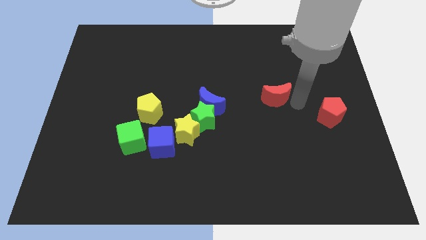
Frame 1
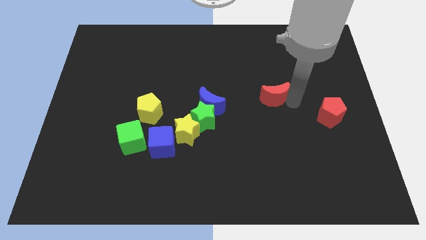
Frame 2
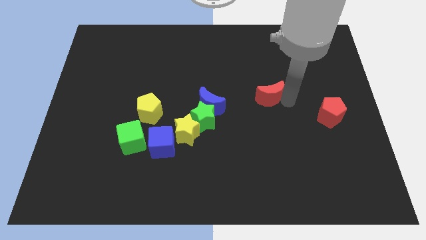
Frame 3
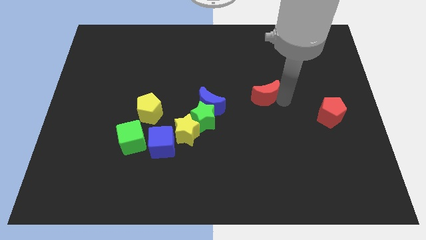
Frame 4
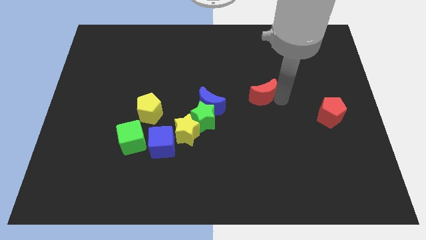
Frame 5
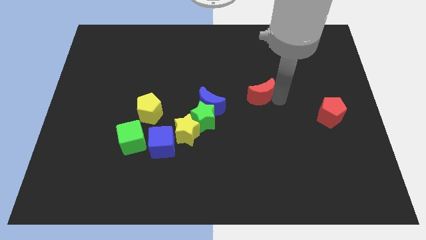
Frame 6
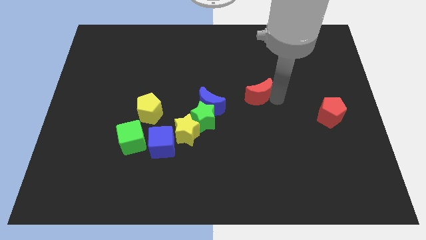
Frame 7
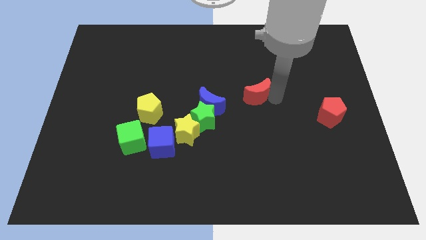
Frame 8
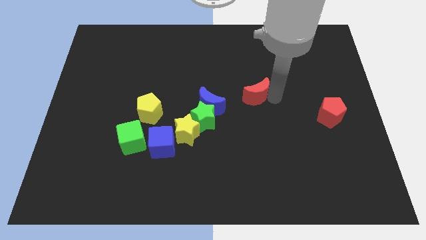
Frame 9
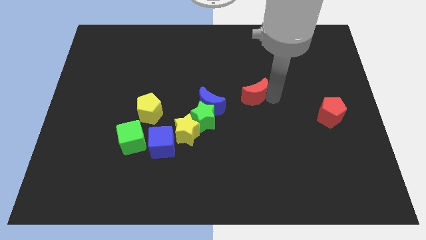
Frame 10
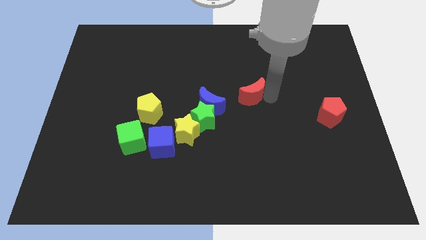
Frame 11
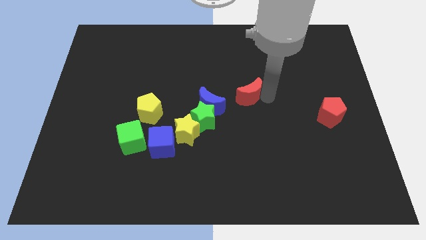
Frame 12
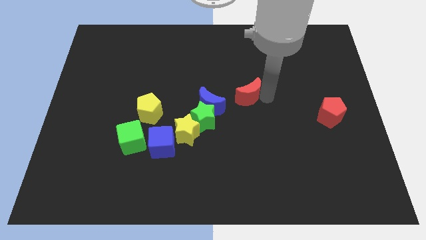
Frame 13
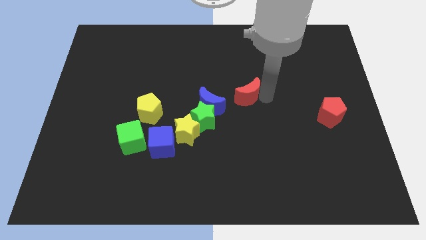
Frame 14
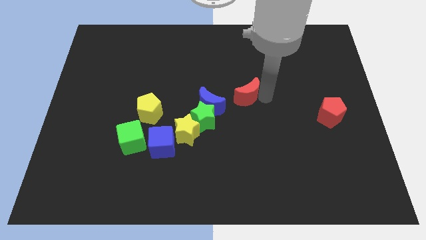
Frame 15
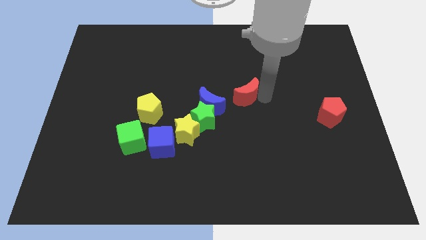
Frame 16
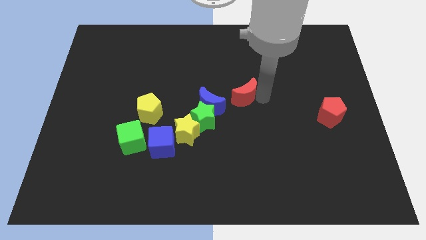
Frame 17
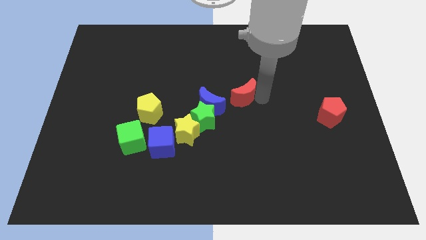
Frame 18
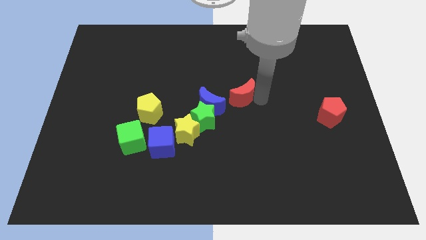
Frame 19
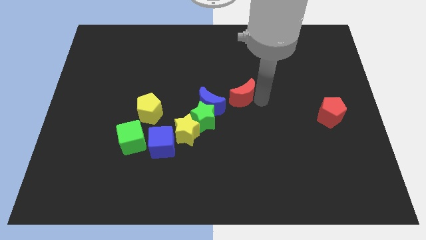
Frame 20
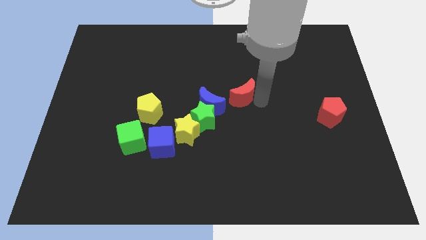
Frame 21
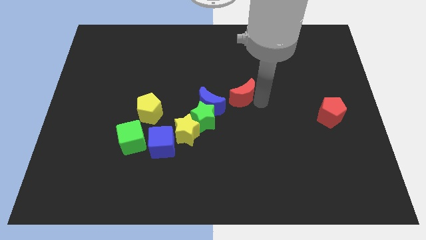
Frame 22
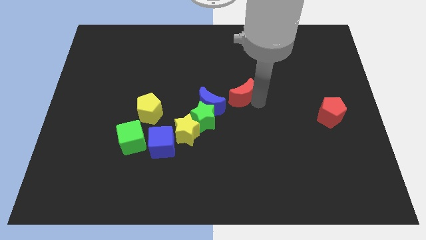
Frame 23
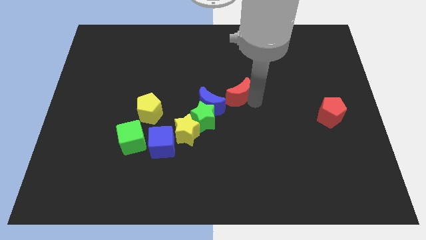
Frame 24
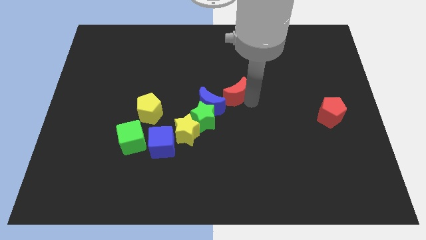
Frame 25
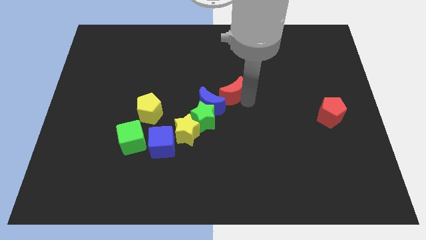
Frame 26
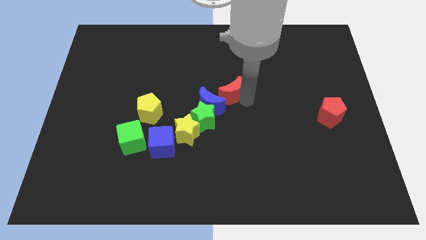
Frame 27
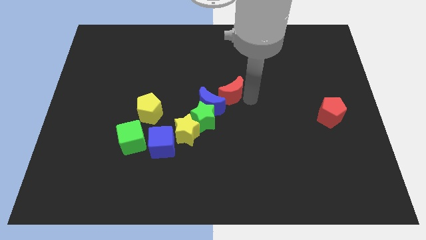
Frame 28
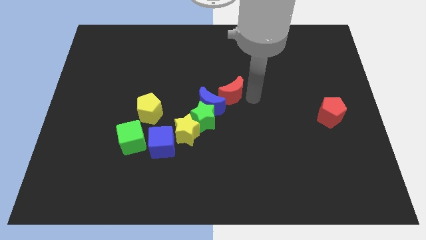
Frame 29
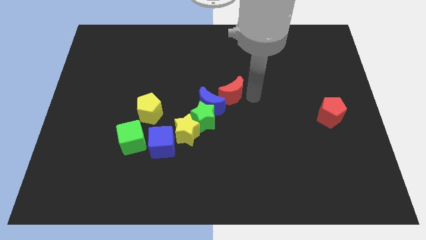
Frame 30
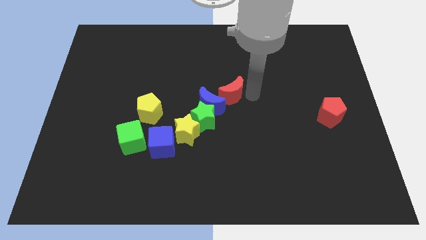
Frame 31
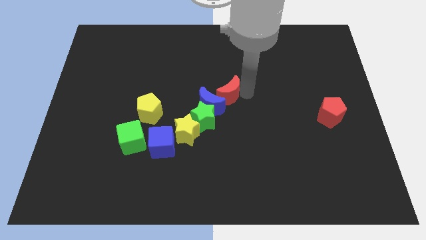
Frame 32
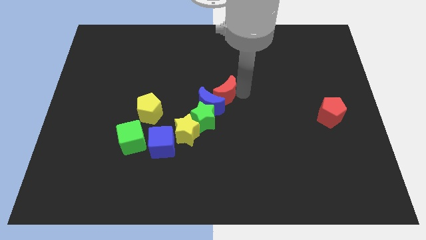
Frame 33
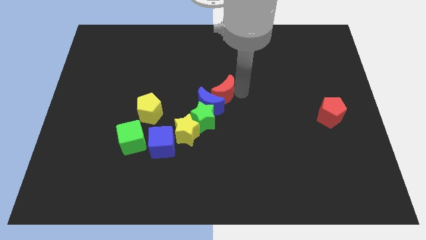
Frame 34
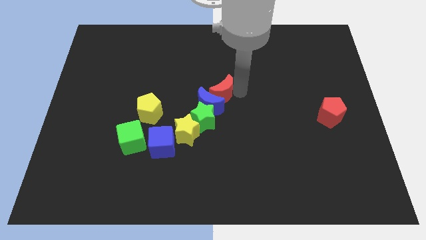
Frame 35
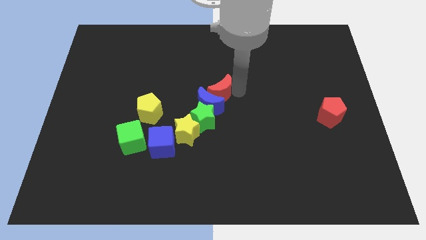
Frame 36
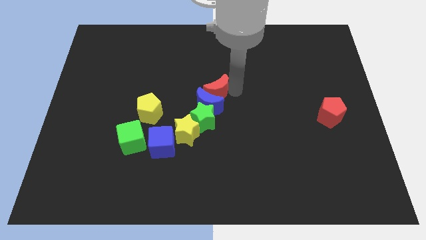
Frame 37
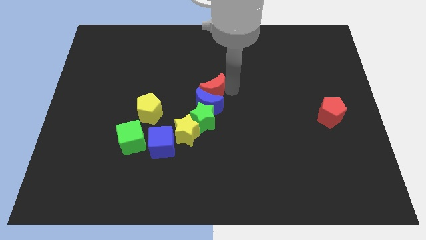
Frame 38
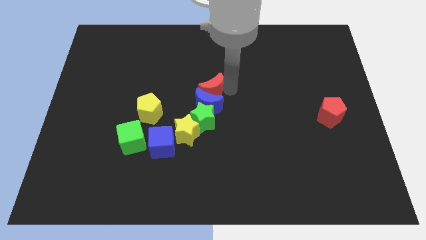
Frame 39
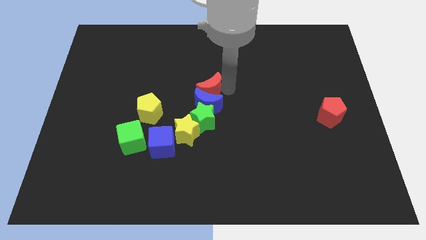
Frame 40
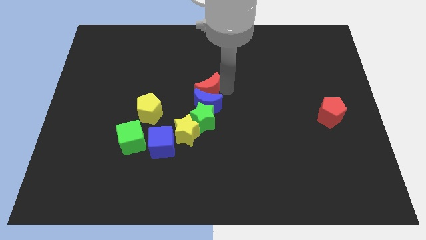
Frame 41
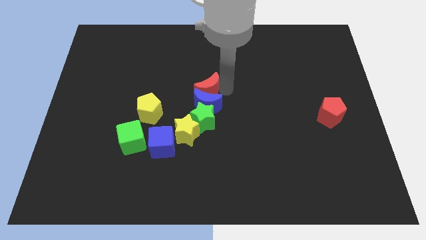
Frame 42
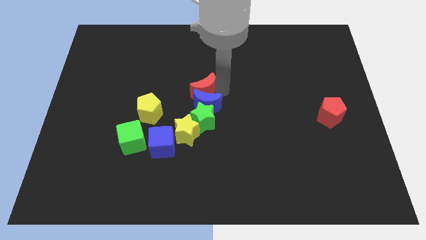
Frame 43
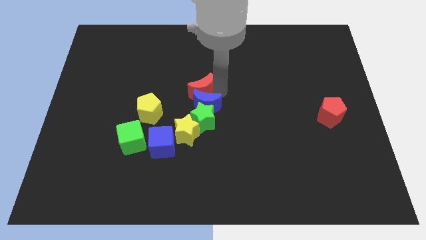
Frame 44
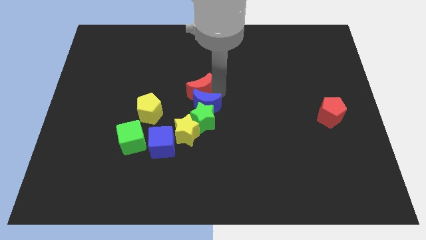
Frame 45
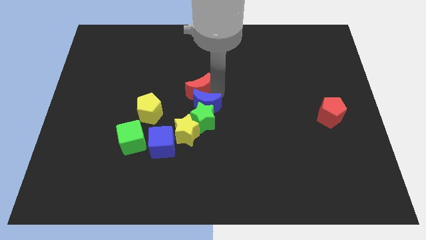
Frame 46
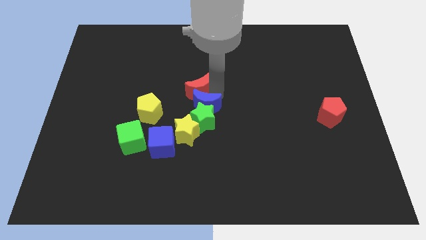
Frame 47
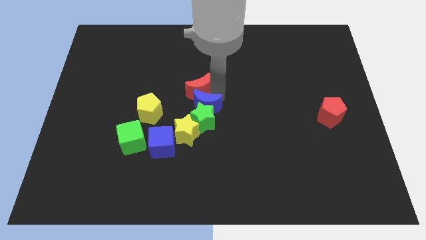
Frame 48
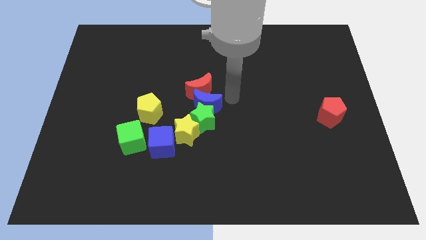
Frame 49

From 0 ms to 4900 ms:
put the red moon above the blue moon

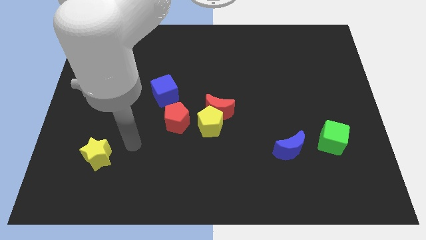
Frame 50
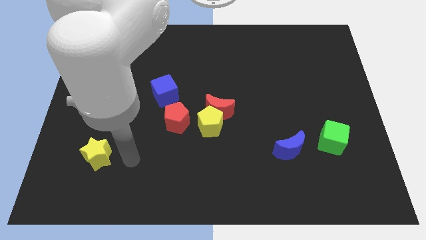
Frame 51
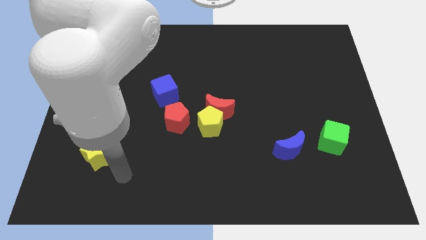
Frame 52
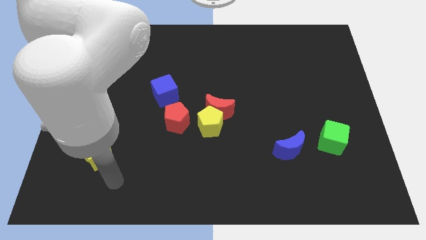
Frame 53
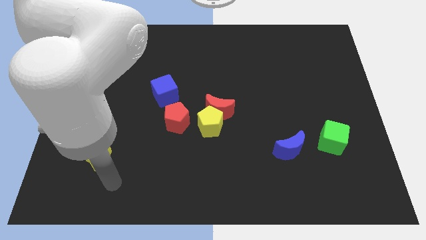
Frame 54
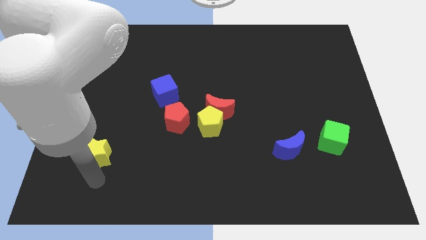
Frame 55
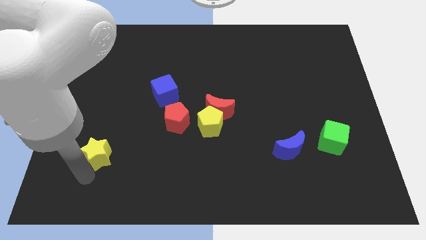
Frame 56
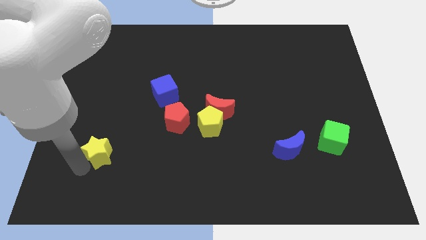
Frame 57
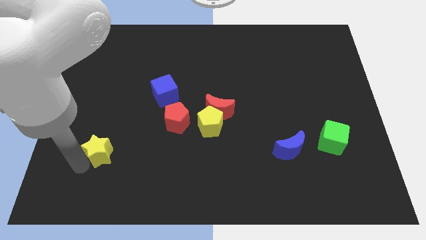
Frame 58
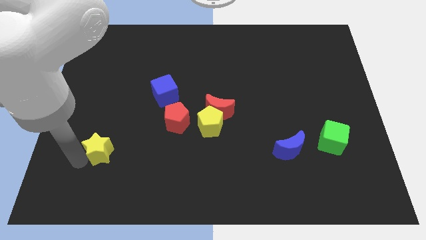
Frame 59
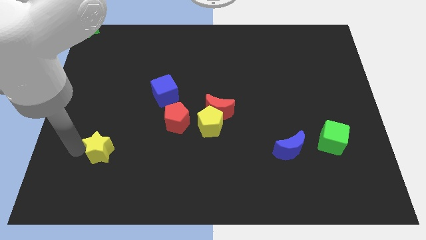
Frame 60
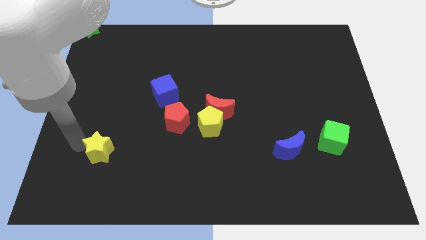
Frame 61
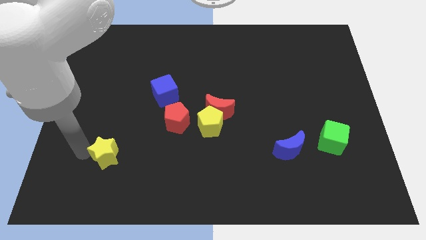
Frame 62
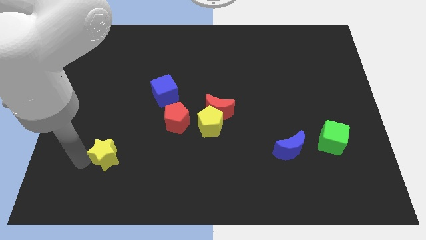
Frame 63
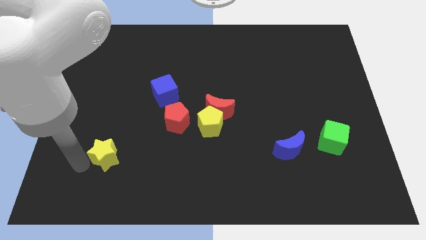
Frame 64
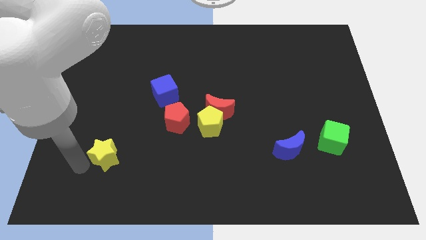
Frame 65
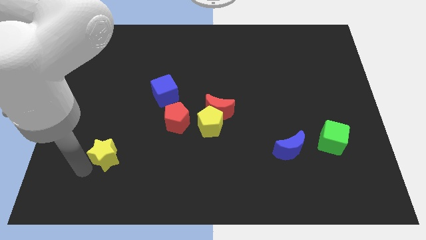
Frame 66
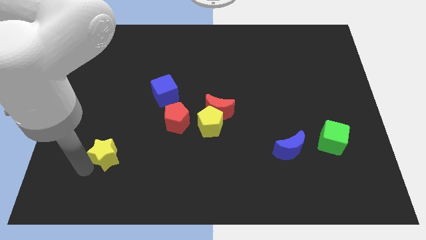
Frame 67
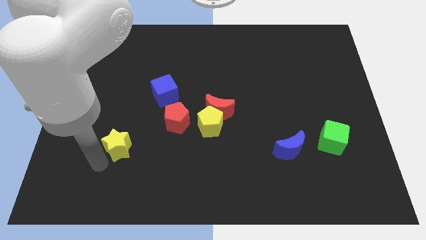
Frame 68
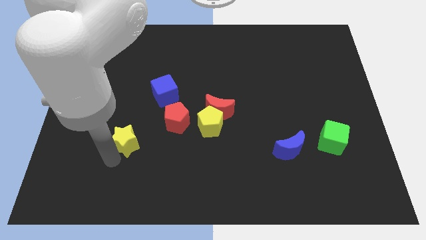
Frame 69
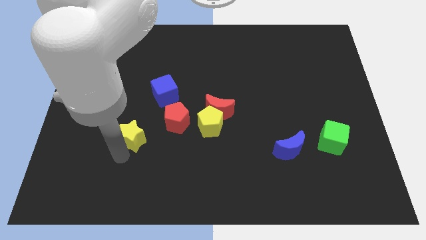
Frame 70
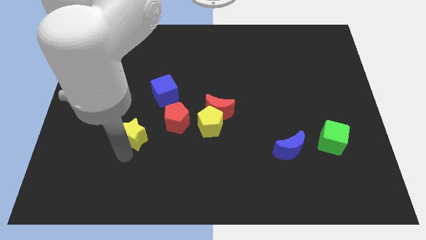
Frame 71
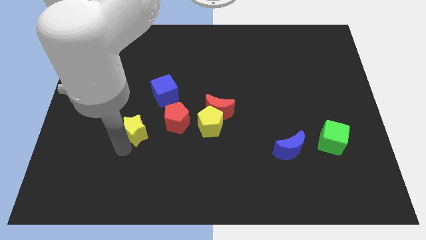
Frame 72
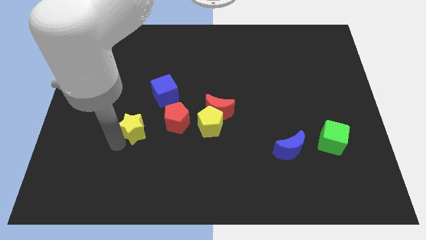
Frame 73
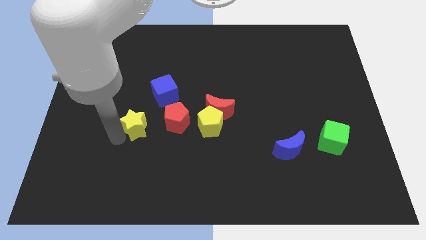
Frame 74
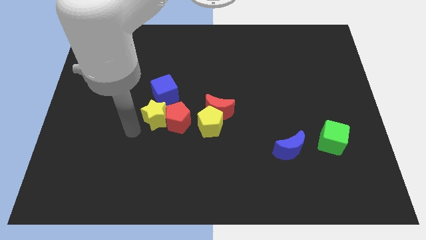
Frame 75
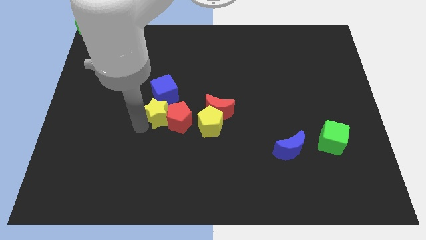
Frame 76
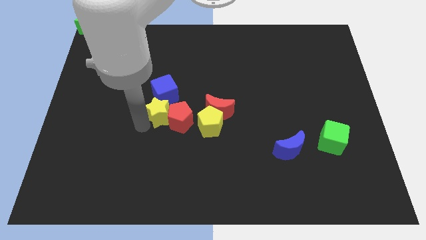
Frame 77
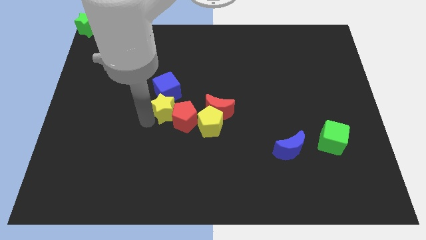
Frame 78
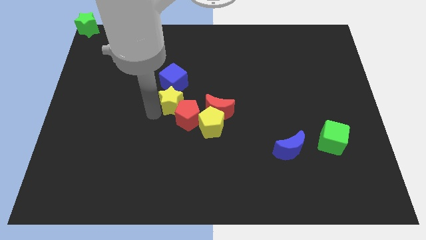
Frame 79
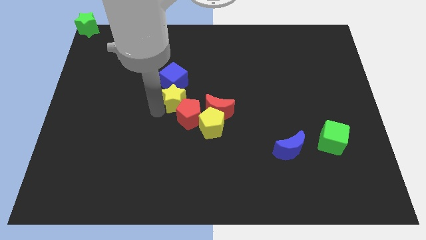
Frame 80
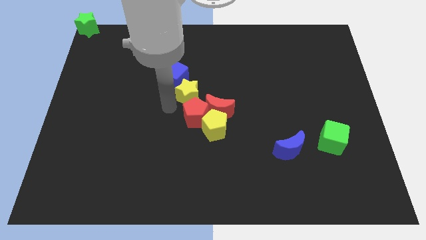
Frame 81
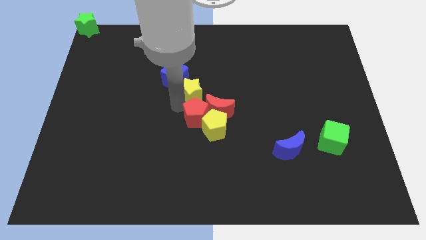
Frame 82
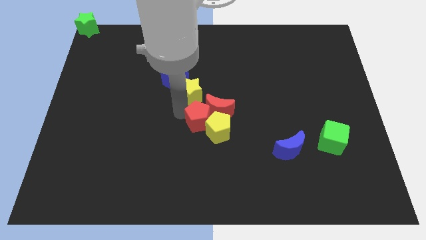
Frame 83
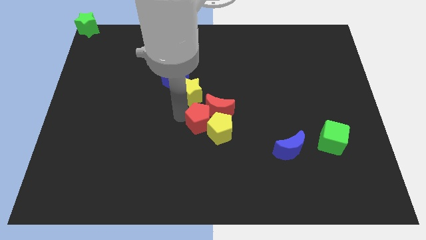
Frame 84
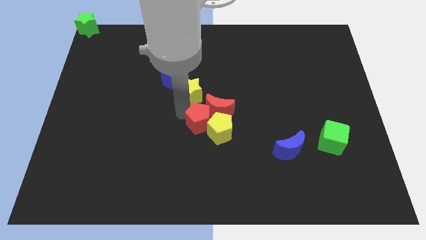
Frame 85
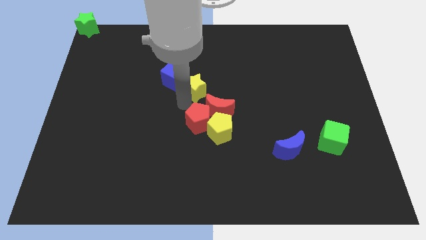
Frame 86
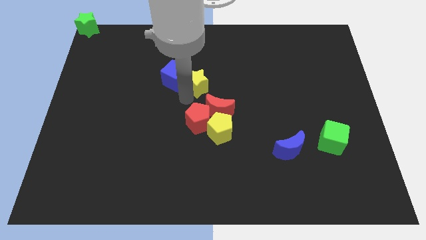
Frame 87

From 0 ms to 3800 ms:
push the yellow star into the group of blocks

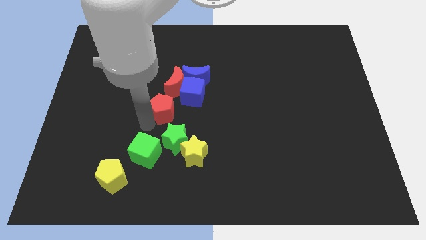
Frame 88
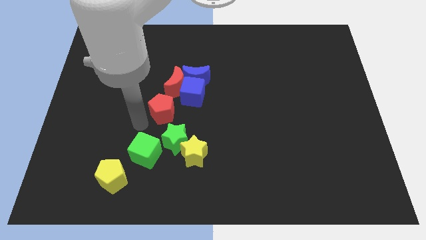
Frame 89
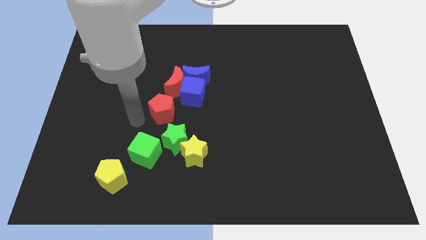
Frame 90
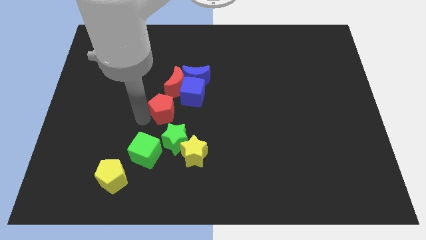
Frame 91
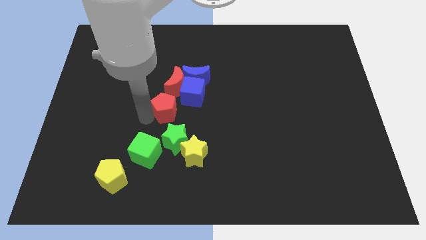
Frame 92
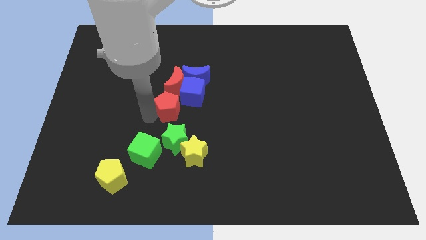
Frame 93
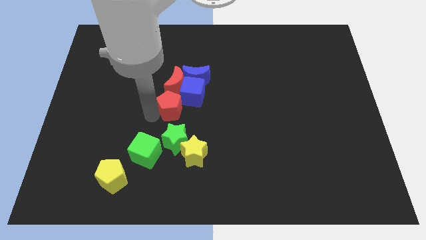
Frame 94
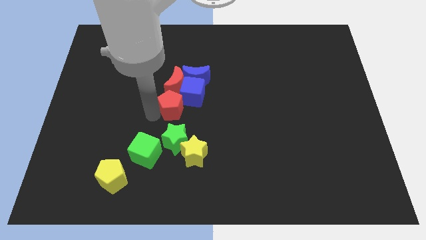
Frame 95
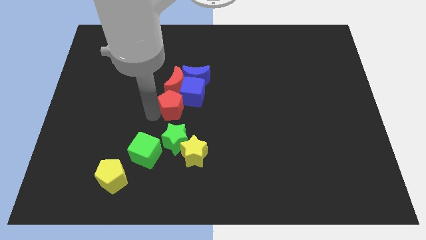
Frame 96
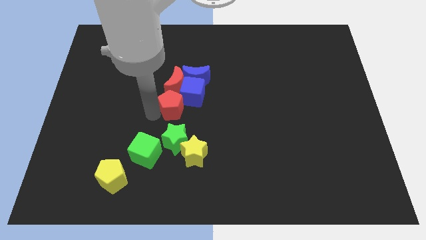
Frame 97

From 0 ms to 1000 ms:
move the red pentagon below the red crescent
